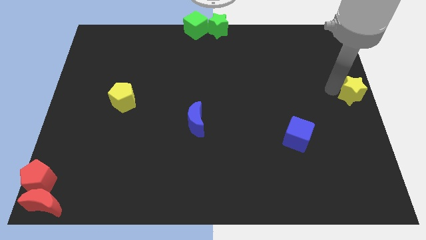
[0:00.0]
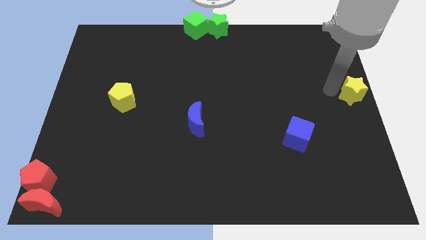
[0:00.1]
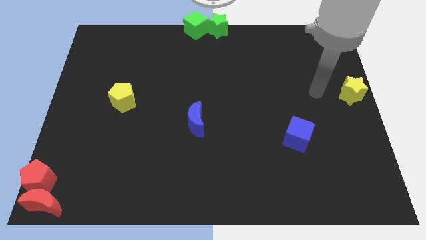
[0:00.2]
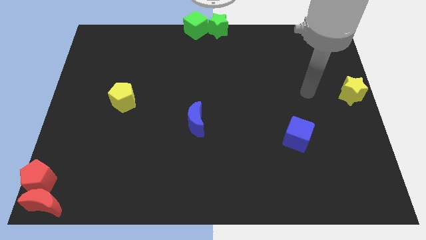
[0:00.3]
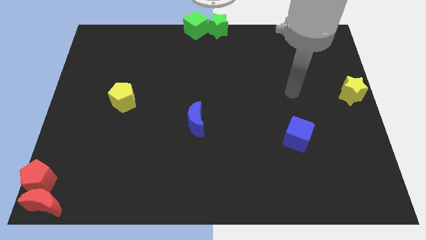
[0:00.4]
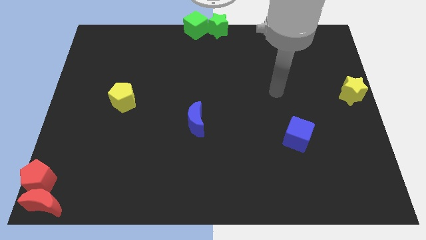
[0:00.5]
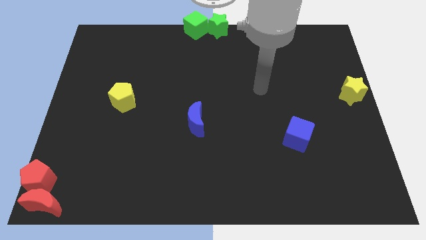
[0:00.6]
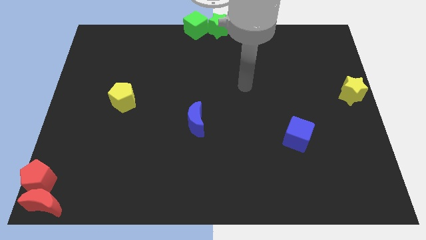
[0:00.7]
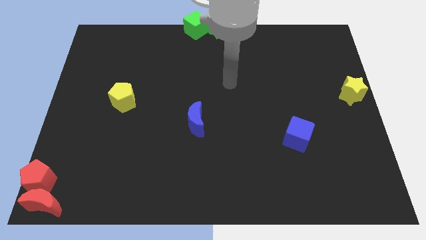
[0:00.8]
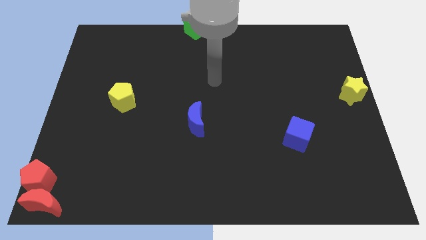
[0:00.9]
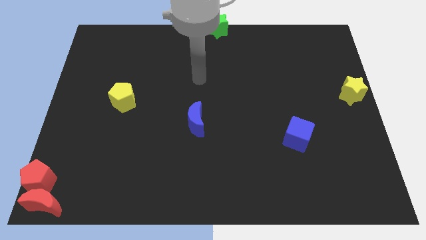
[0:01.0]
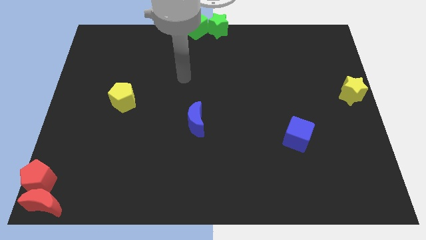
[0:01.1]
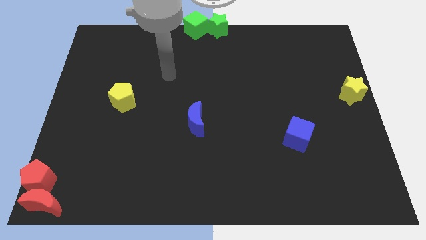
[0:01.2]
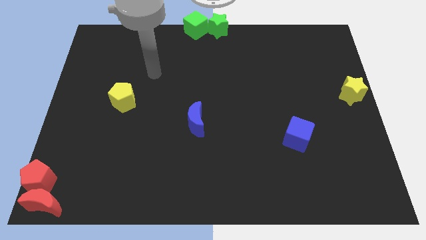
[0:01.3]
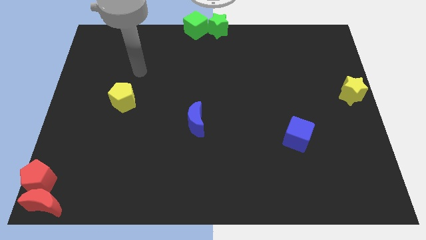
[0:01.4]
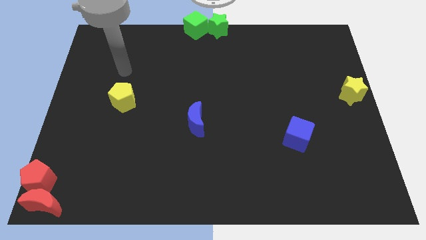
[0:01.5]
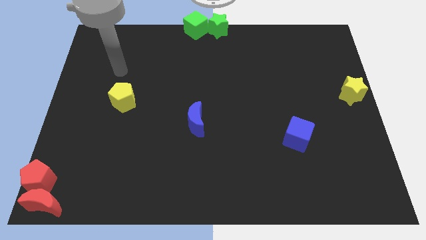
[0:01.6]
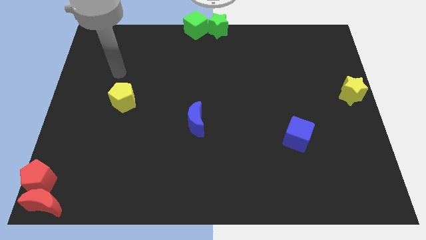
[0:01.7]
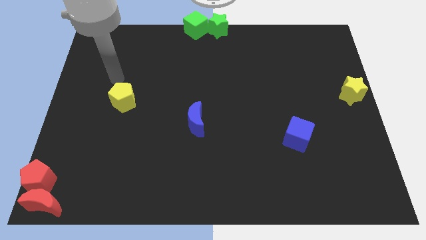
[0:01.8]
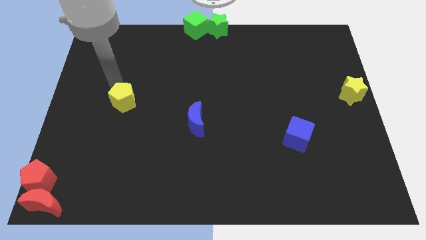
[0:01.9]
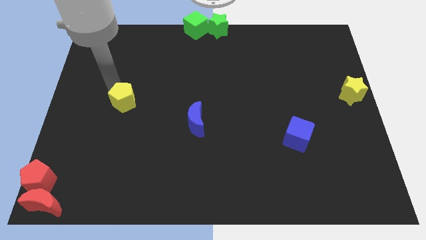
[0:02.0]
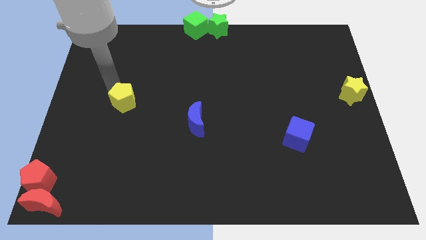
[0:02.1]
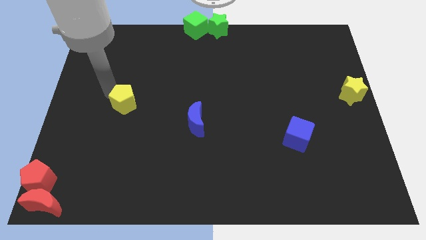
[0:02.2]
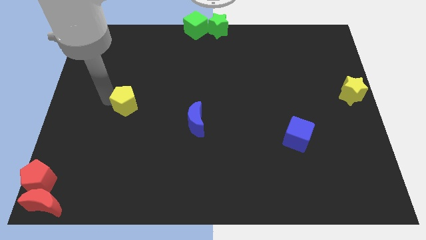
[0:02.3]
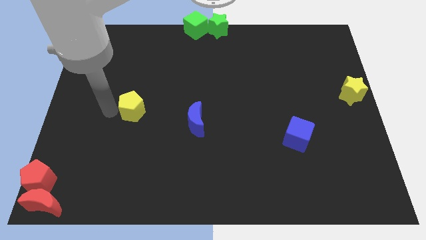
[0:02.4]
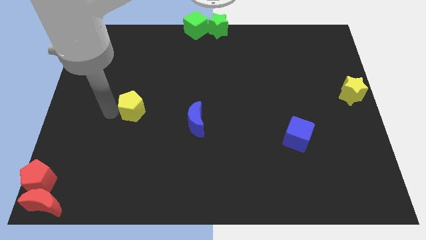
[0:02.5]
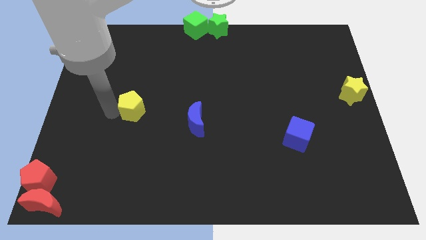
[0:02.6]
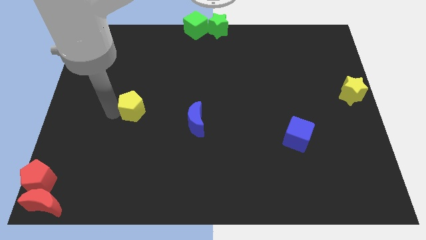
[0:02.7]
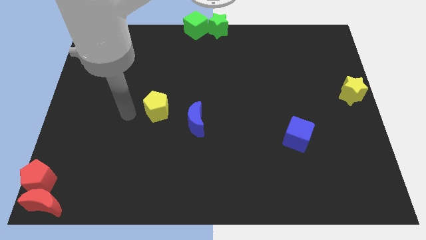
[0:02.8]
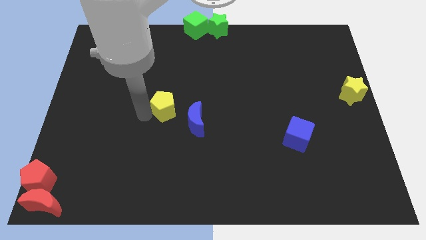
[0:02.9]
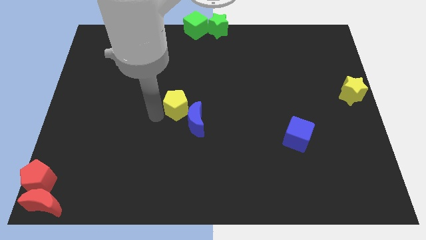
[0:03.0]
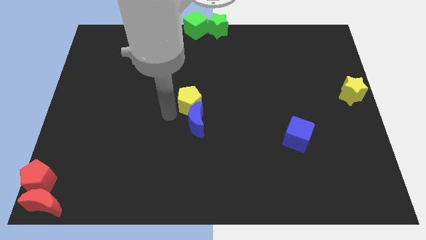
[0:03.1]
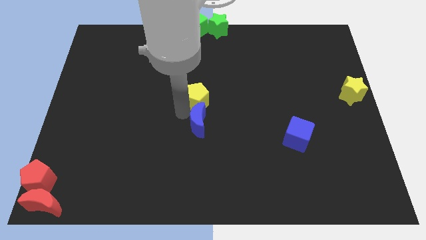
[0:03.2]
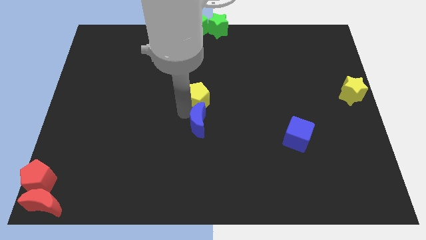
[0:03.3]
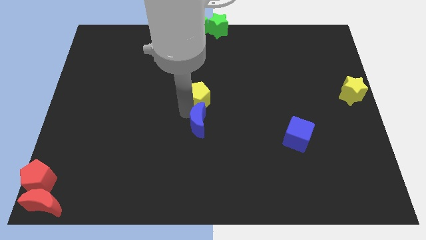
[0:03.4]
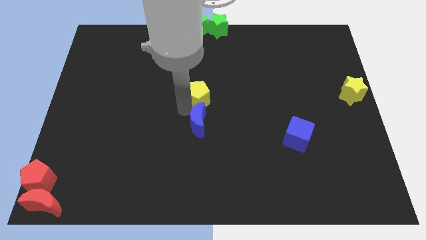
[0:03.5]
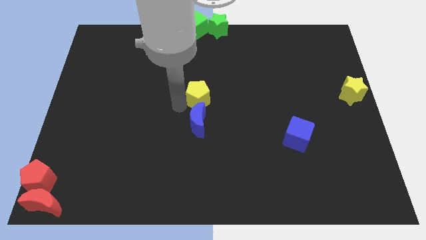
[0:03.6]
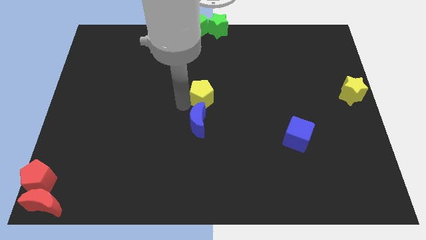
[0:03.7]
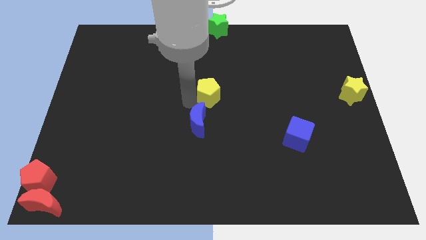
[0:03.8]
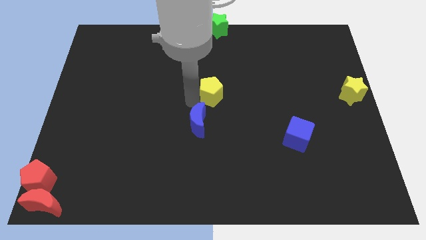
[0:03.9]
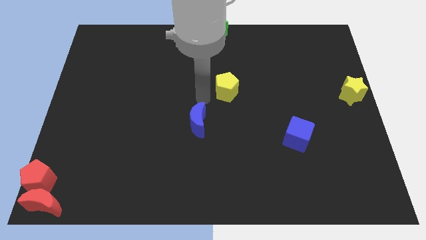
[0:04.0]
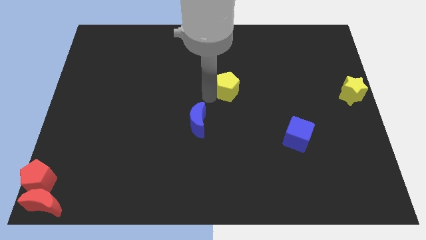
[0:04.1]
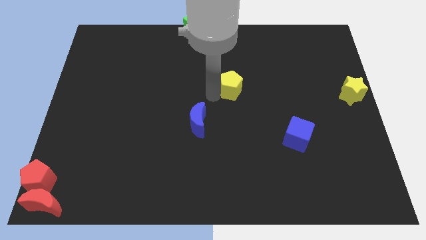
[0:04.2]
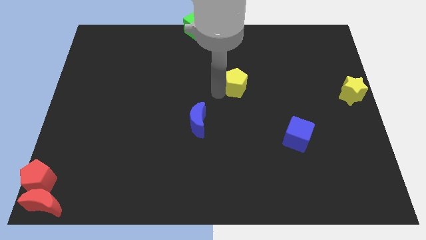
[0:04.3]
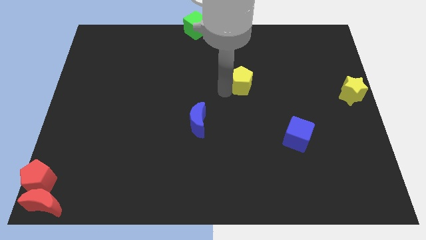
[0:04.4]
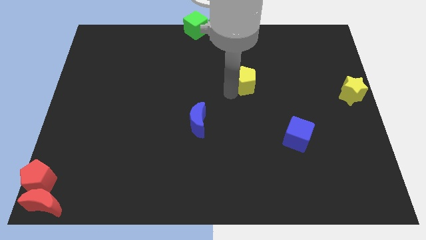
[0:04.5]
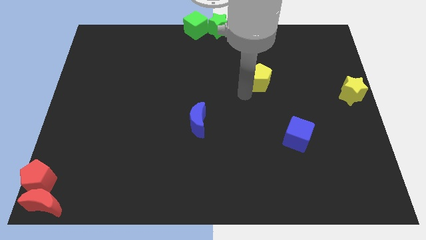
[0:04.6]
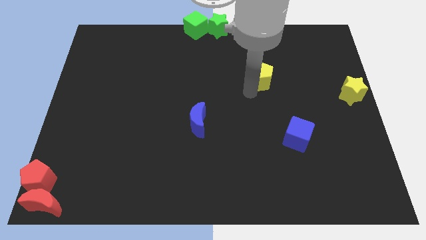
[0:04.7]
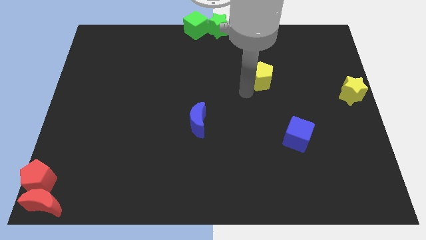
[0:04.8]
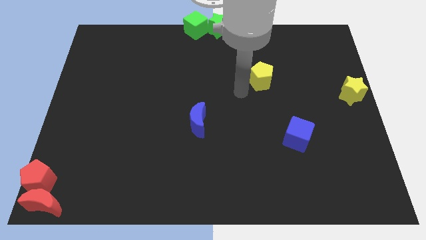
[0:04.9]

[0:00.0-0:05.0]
drag the yellow pentagon diagonally top right to the blue moon

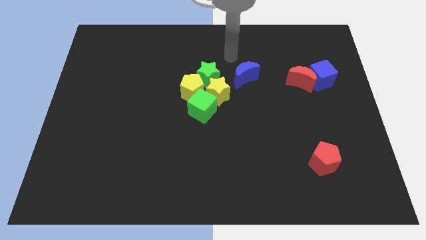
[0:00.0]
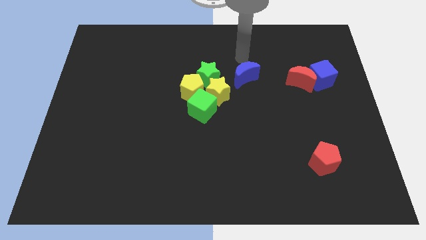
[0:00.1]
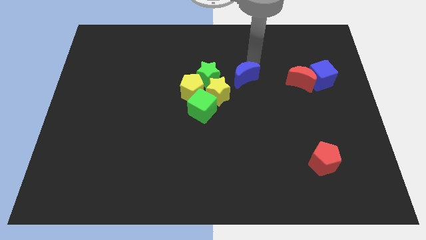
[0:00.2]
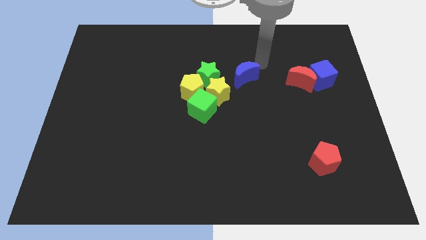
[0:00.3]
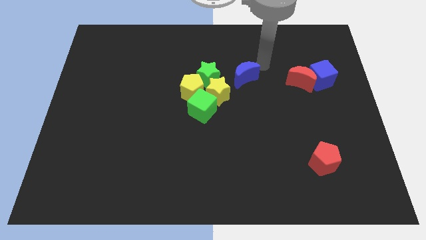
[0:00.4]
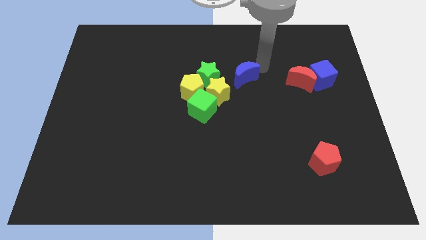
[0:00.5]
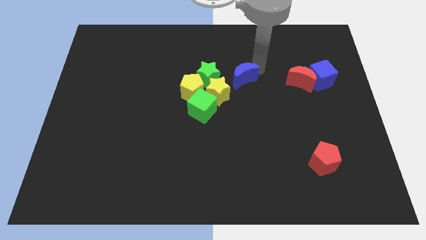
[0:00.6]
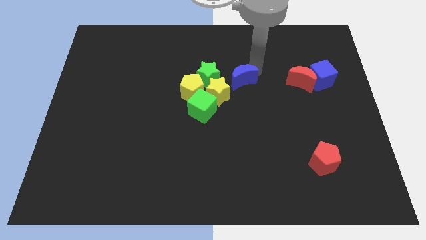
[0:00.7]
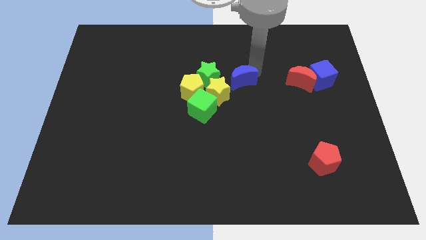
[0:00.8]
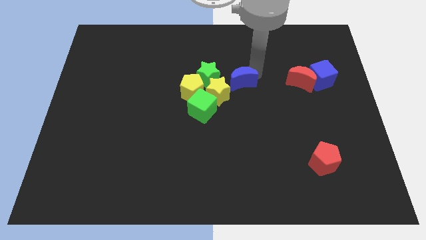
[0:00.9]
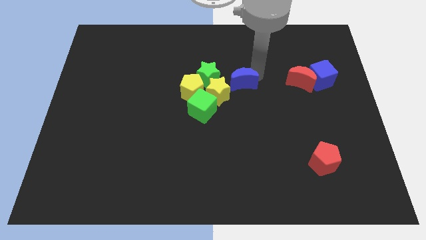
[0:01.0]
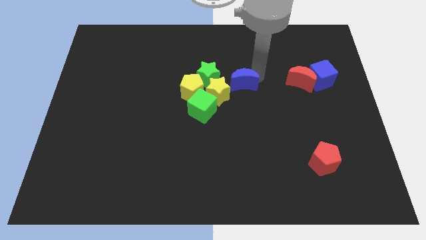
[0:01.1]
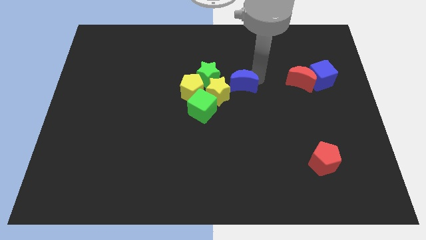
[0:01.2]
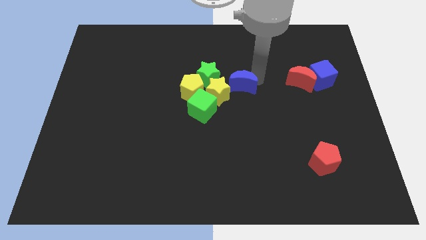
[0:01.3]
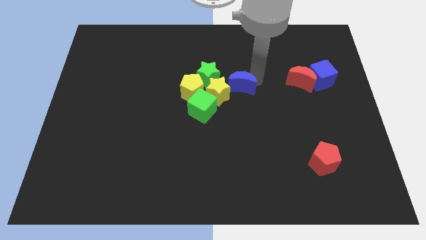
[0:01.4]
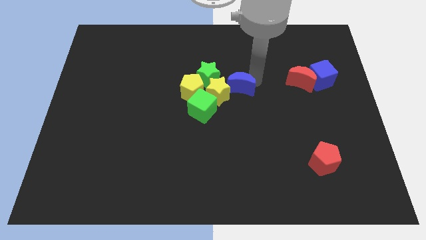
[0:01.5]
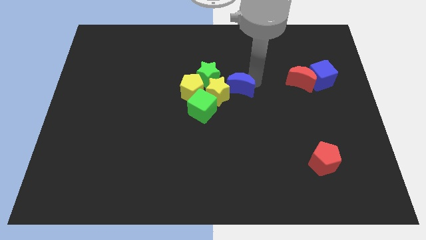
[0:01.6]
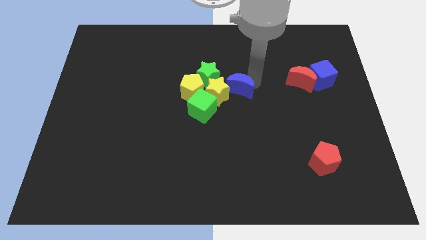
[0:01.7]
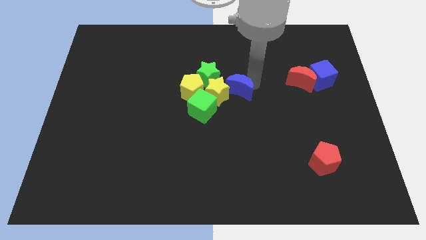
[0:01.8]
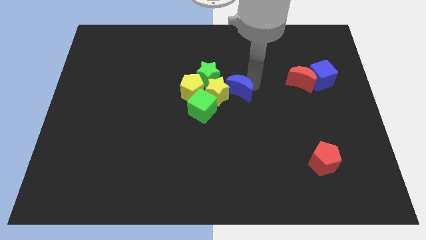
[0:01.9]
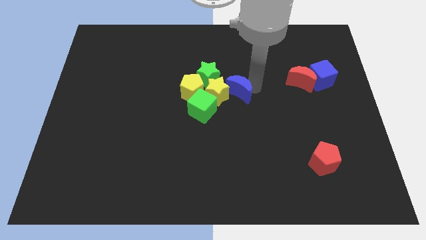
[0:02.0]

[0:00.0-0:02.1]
slide the blue crescent into the right side of the yellow star

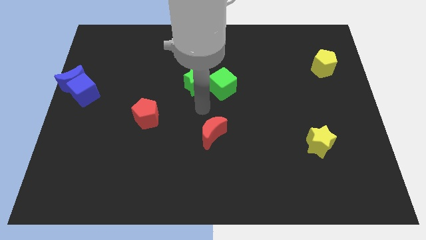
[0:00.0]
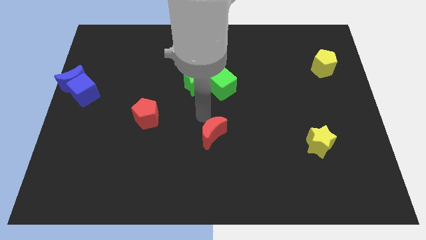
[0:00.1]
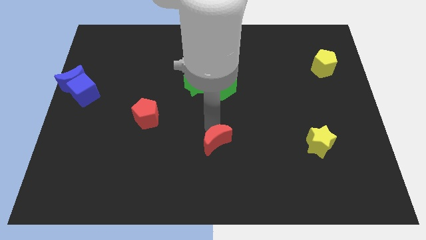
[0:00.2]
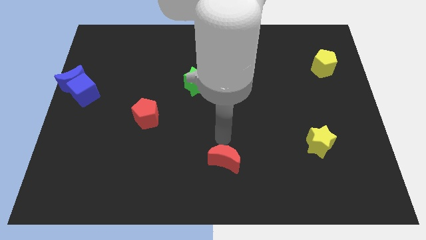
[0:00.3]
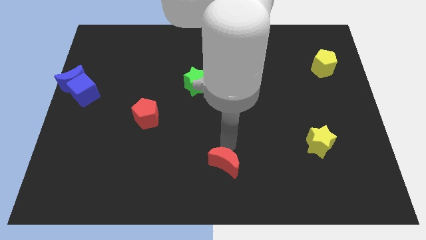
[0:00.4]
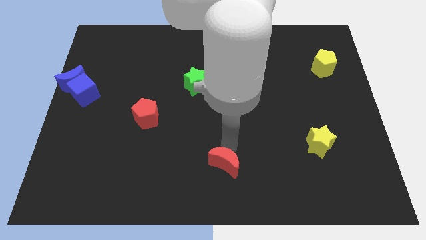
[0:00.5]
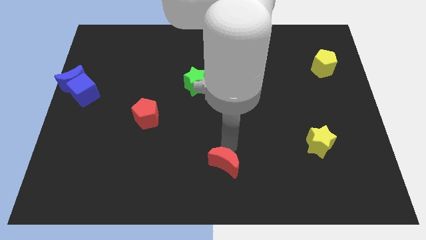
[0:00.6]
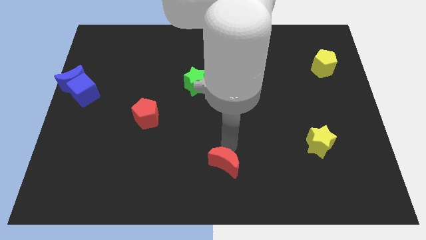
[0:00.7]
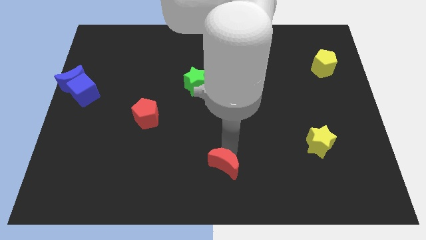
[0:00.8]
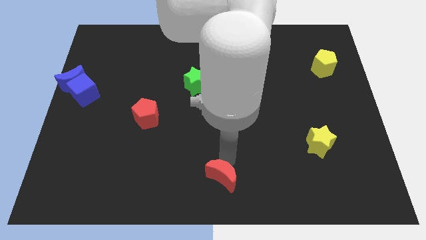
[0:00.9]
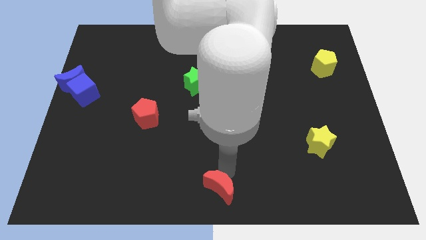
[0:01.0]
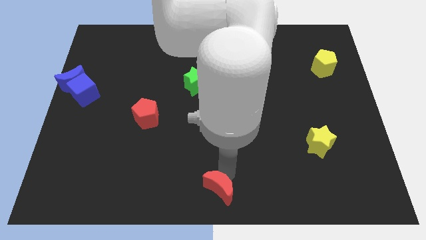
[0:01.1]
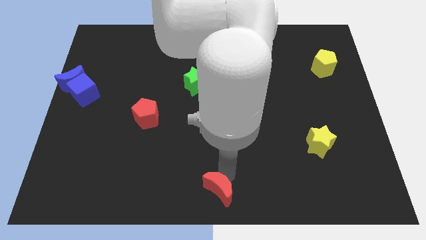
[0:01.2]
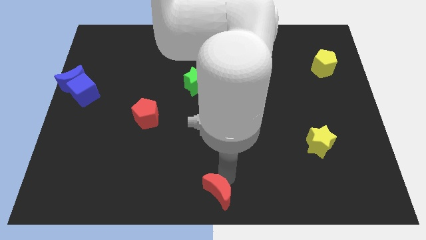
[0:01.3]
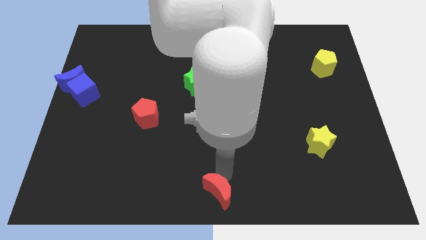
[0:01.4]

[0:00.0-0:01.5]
slightly push the red moon downwards to the center of the board

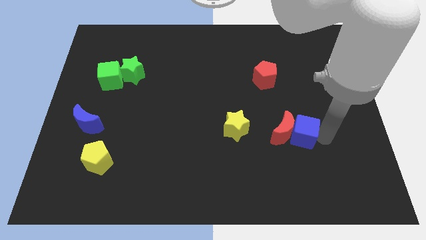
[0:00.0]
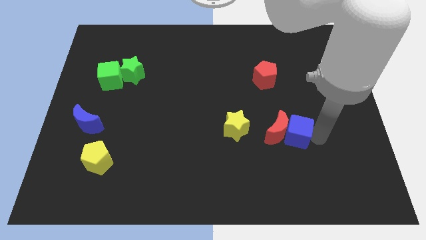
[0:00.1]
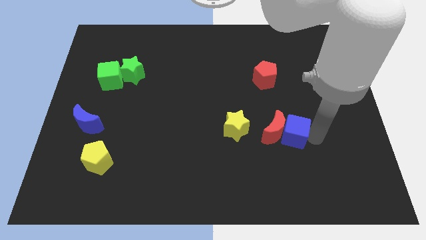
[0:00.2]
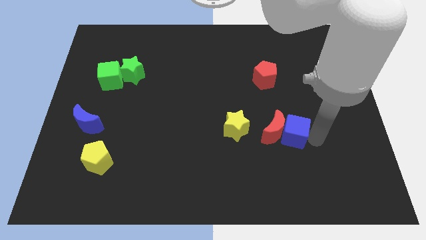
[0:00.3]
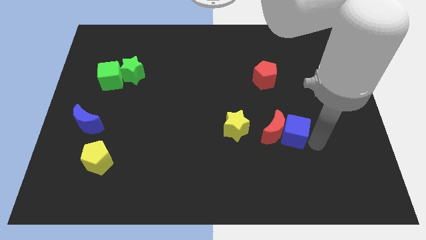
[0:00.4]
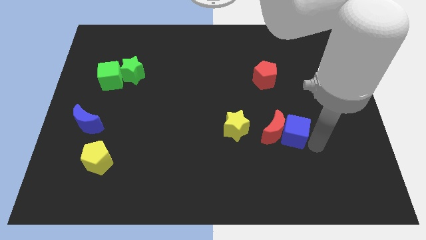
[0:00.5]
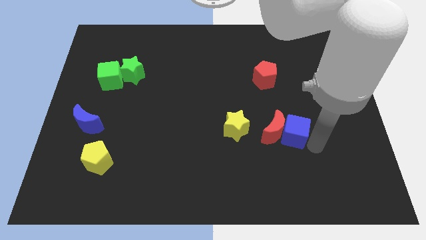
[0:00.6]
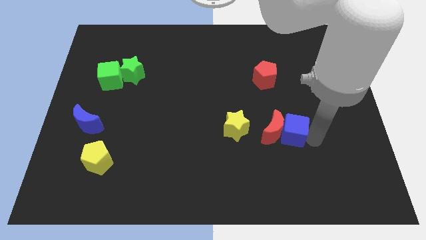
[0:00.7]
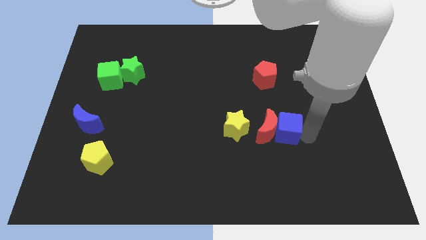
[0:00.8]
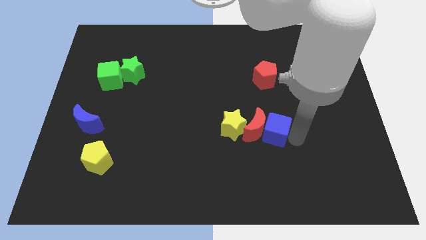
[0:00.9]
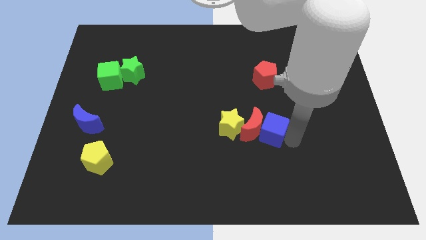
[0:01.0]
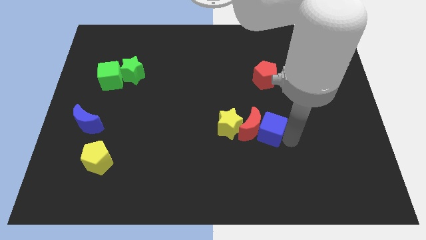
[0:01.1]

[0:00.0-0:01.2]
push the blue cube and red crescent into the yellow star
